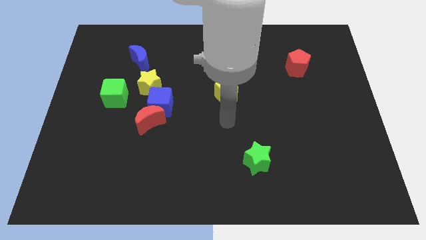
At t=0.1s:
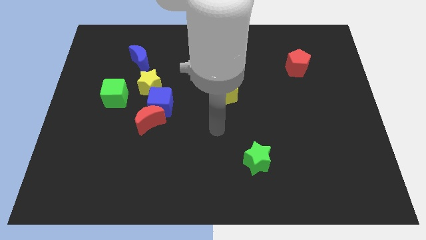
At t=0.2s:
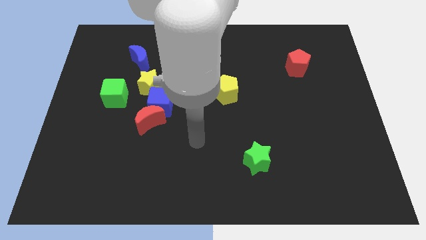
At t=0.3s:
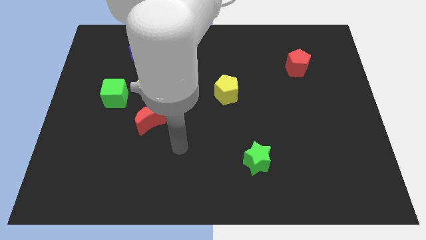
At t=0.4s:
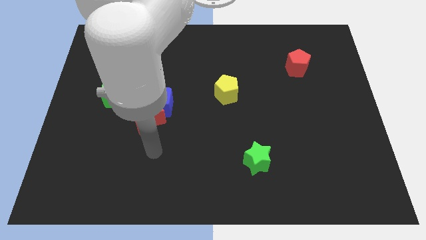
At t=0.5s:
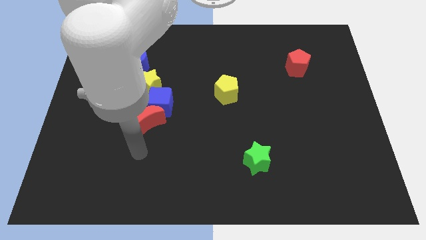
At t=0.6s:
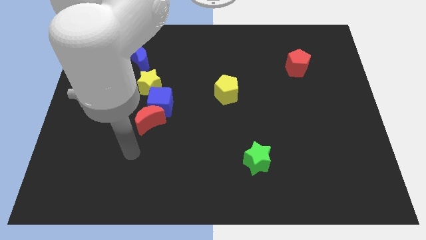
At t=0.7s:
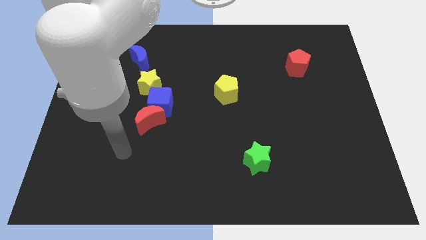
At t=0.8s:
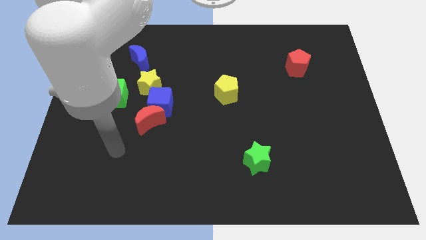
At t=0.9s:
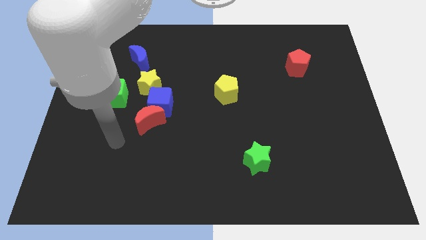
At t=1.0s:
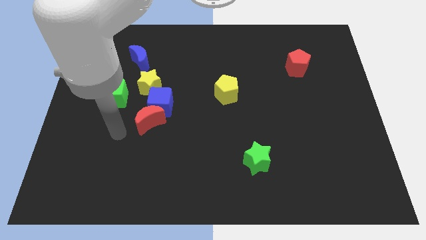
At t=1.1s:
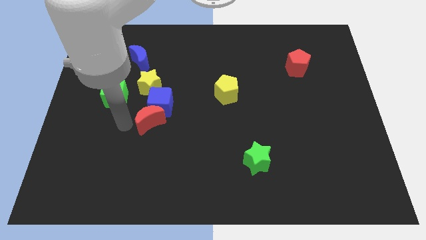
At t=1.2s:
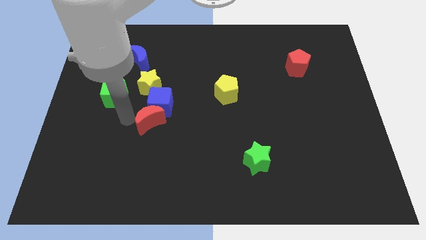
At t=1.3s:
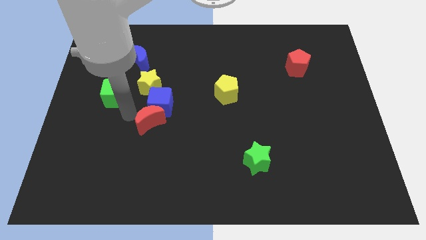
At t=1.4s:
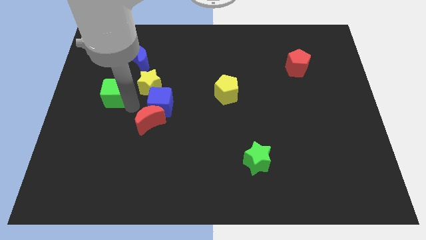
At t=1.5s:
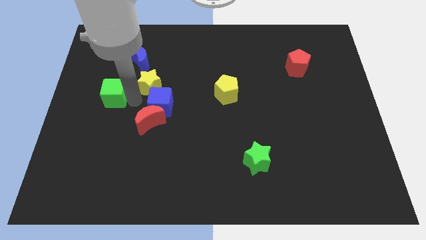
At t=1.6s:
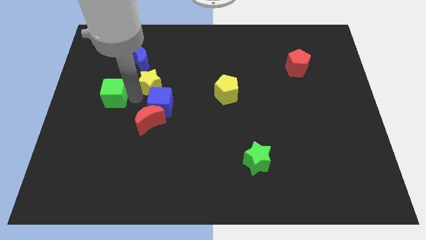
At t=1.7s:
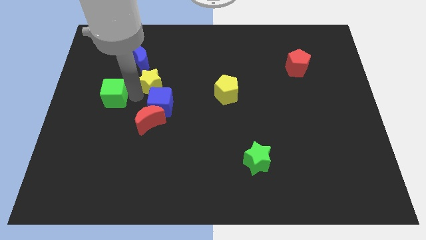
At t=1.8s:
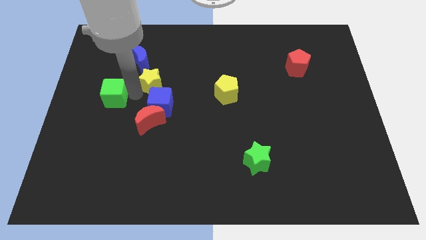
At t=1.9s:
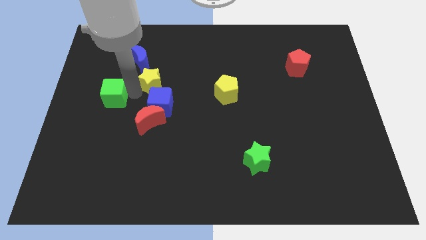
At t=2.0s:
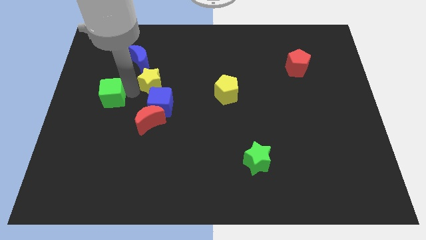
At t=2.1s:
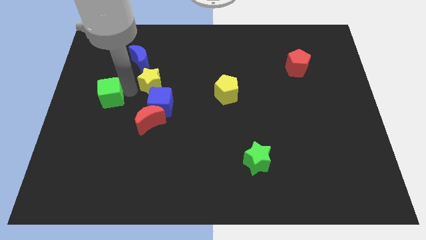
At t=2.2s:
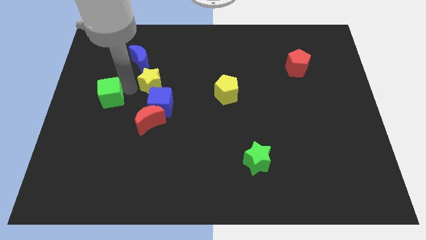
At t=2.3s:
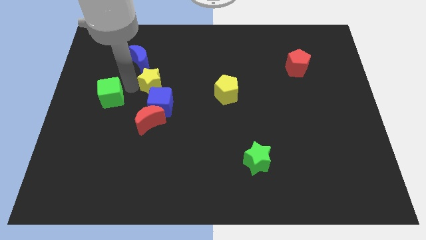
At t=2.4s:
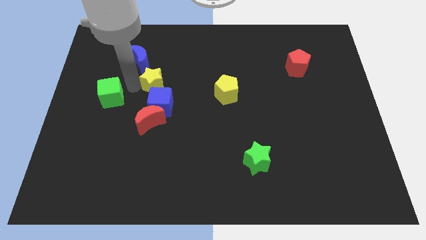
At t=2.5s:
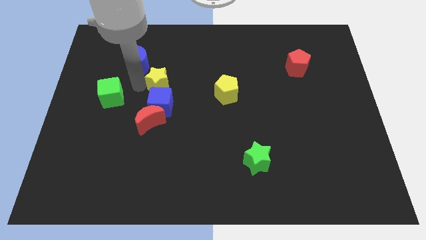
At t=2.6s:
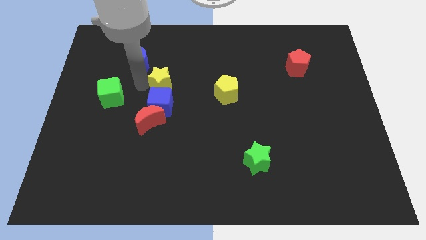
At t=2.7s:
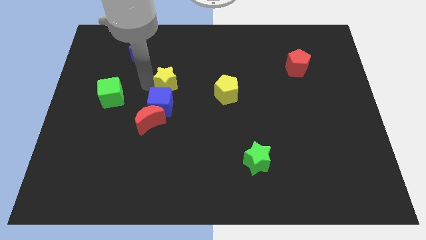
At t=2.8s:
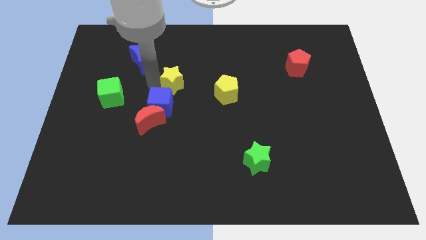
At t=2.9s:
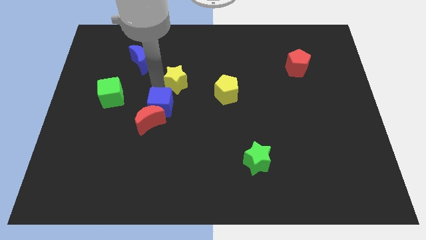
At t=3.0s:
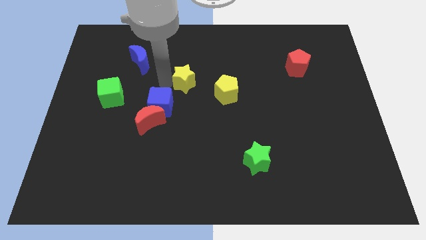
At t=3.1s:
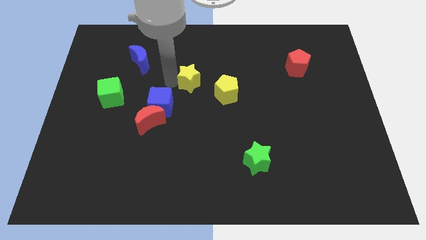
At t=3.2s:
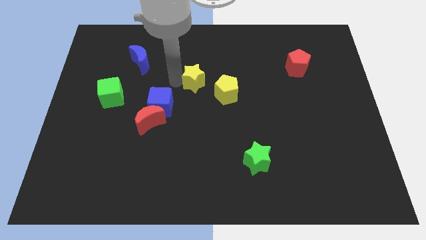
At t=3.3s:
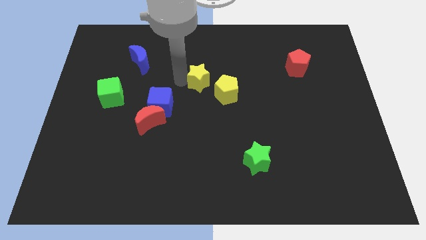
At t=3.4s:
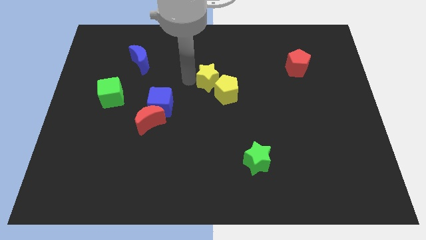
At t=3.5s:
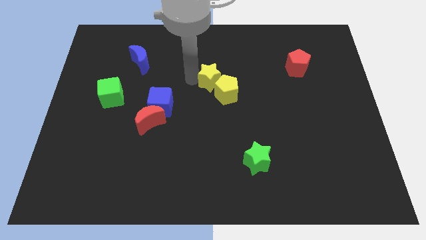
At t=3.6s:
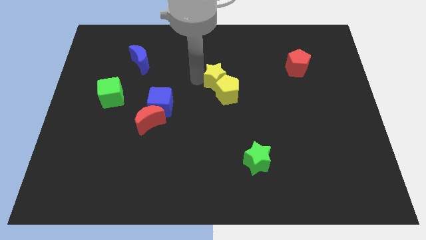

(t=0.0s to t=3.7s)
move the yellow star towards the yellow pentagon

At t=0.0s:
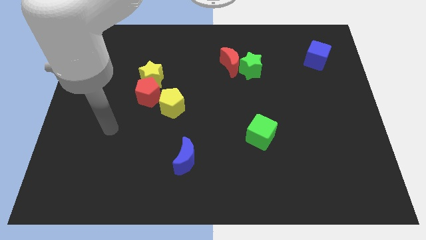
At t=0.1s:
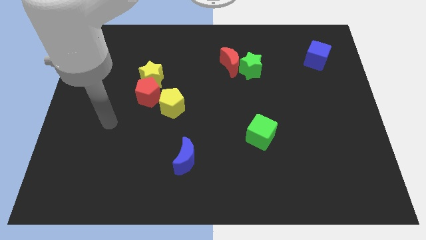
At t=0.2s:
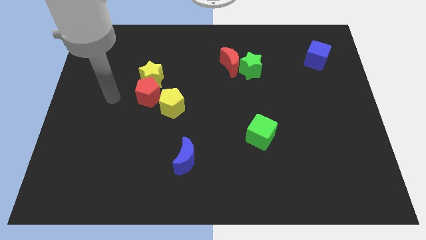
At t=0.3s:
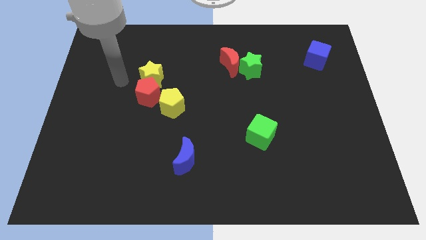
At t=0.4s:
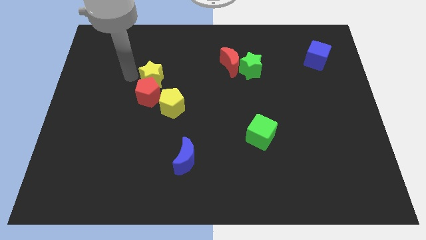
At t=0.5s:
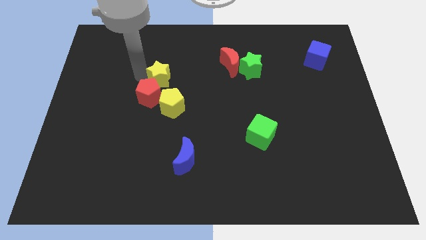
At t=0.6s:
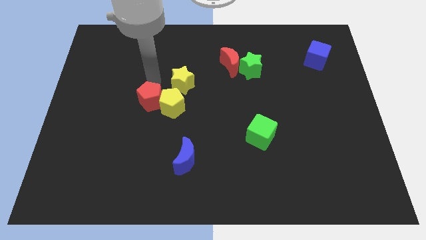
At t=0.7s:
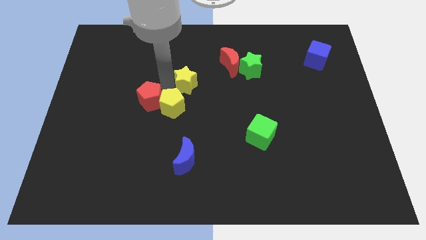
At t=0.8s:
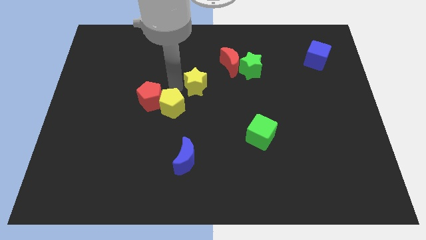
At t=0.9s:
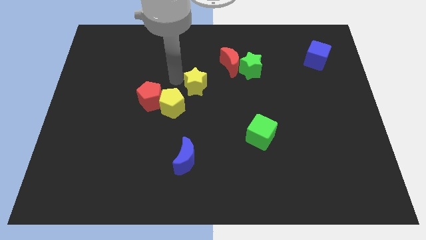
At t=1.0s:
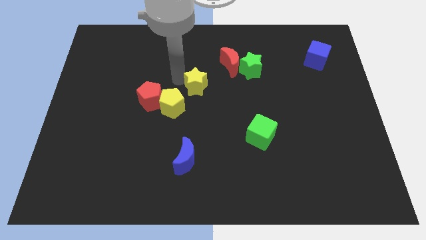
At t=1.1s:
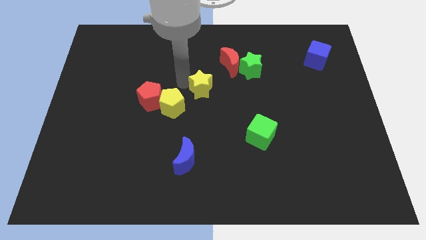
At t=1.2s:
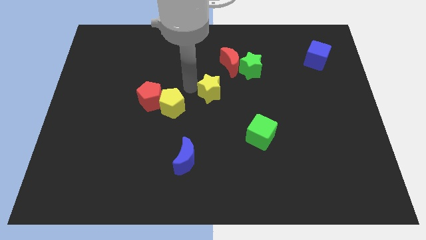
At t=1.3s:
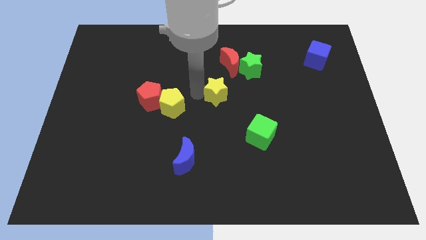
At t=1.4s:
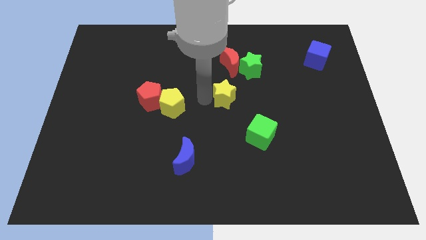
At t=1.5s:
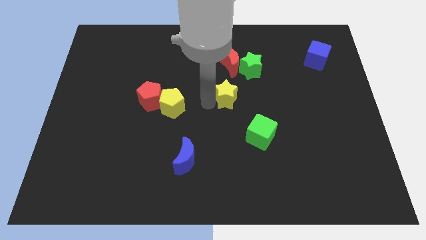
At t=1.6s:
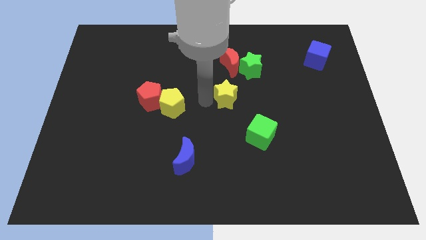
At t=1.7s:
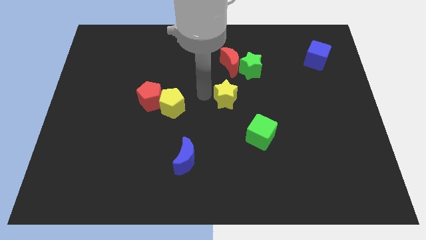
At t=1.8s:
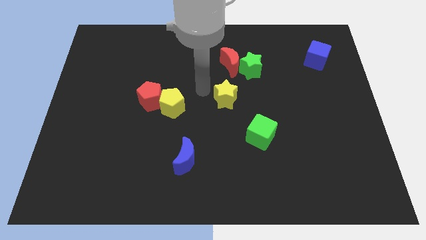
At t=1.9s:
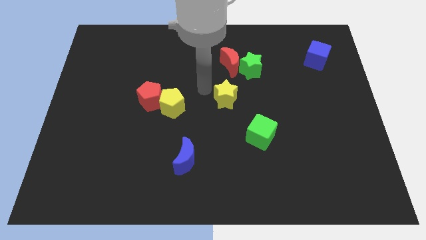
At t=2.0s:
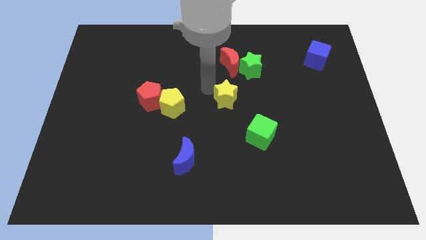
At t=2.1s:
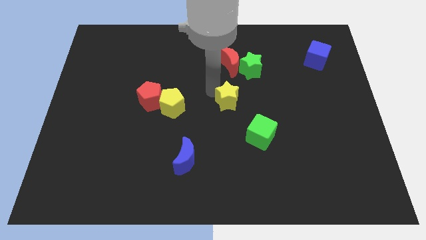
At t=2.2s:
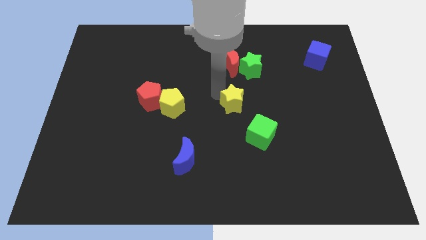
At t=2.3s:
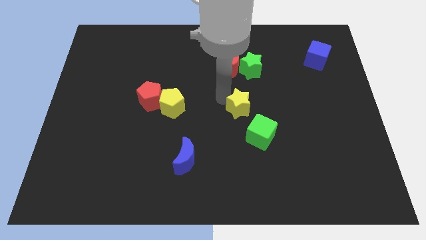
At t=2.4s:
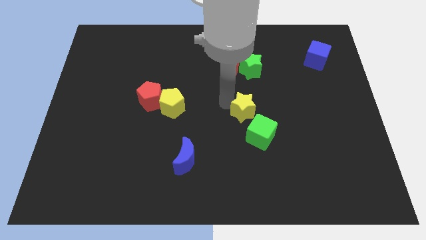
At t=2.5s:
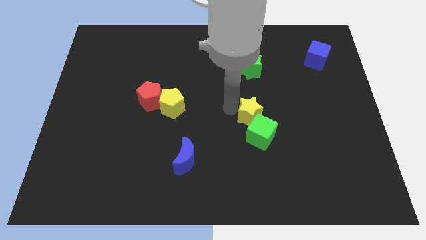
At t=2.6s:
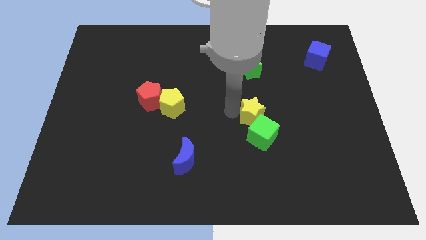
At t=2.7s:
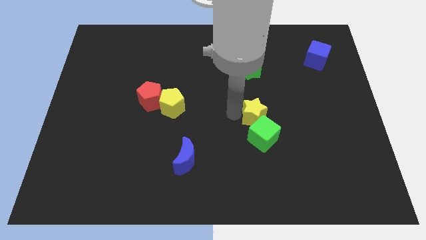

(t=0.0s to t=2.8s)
put the yellow star close to the green cube

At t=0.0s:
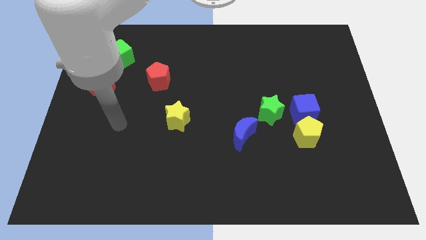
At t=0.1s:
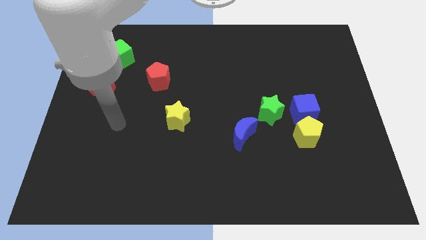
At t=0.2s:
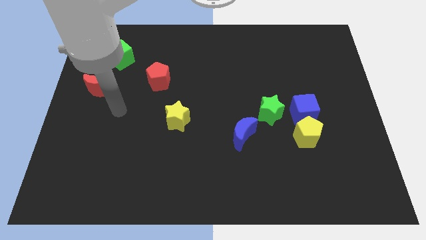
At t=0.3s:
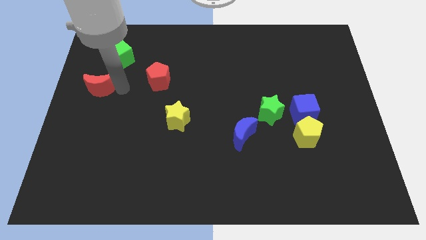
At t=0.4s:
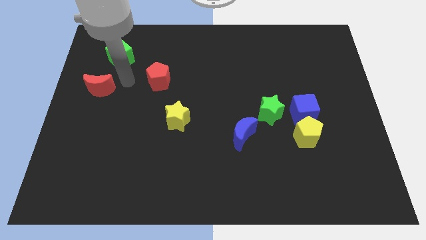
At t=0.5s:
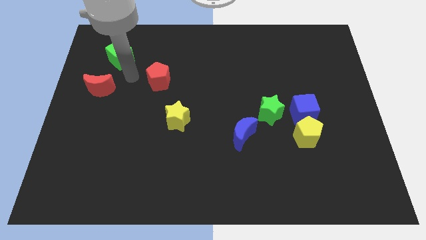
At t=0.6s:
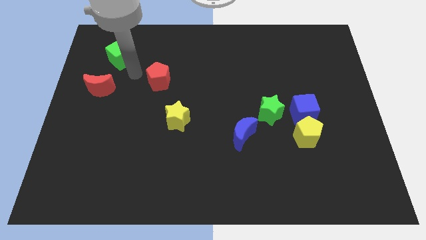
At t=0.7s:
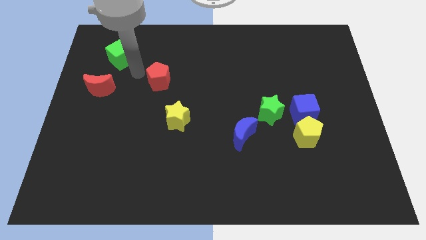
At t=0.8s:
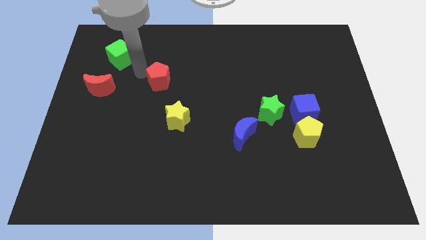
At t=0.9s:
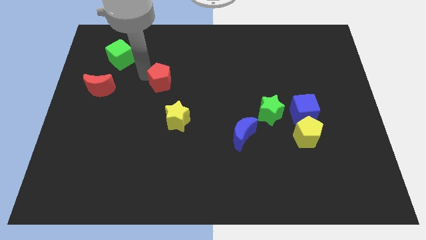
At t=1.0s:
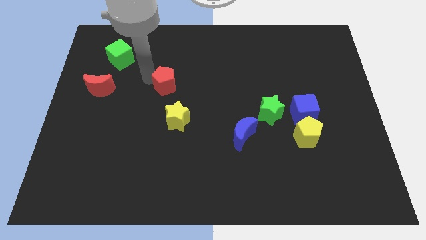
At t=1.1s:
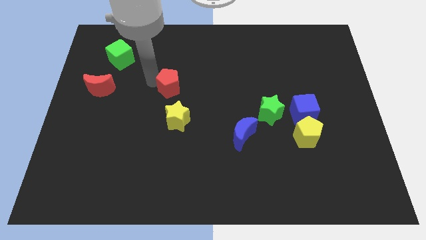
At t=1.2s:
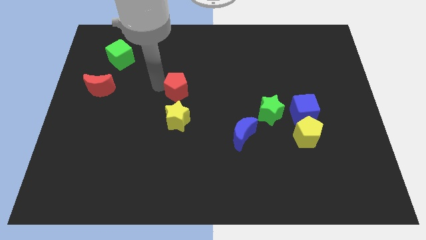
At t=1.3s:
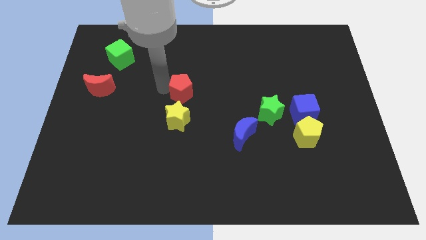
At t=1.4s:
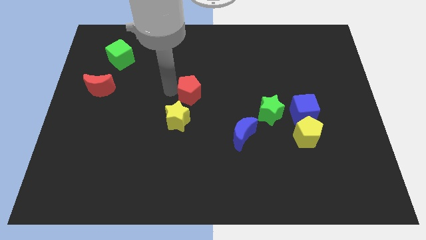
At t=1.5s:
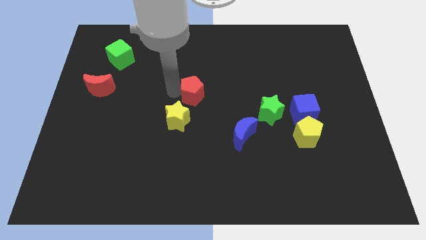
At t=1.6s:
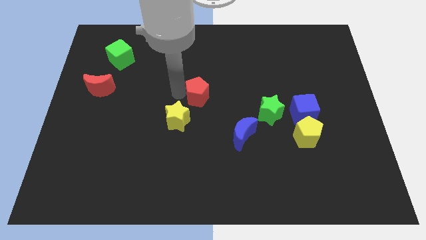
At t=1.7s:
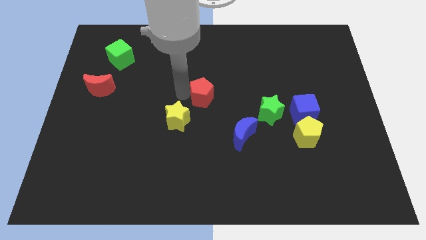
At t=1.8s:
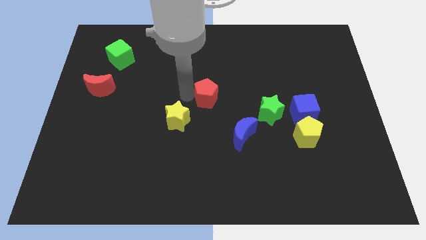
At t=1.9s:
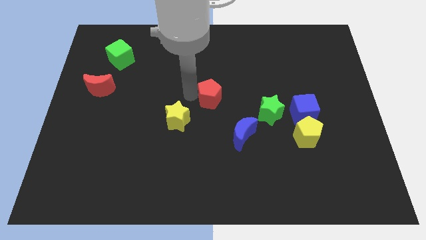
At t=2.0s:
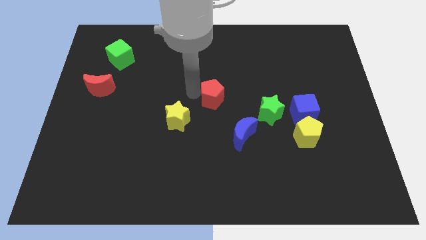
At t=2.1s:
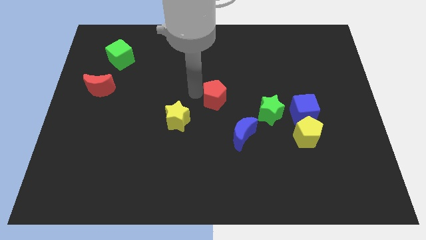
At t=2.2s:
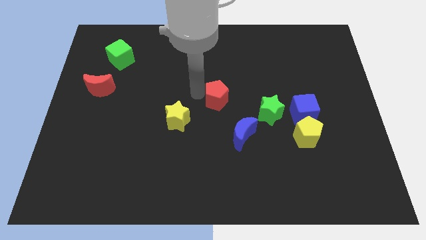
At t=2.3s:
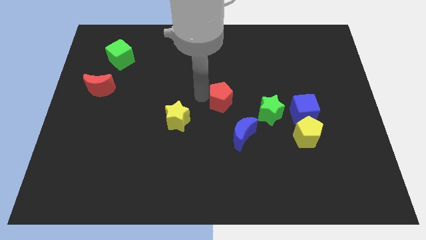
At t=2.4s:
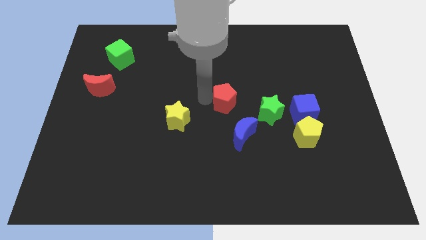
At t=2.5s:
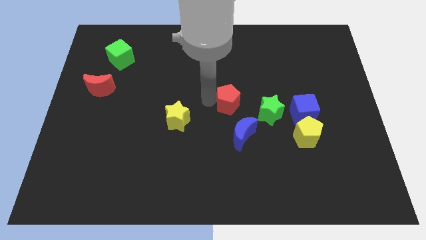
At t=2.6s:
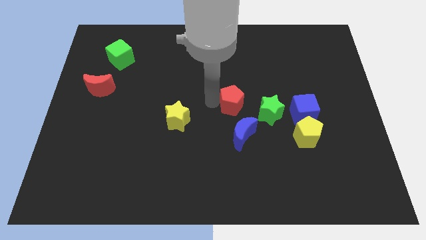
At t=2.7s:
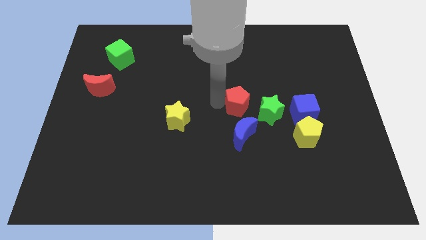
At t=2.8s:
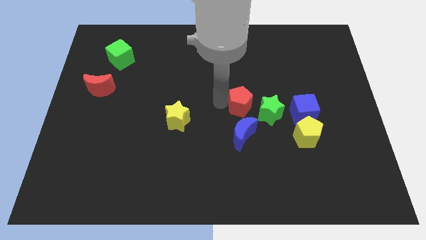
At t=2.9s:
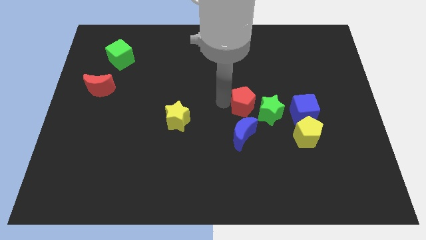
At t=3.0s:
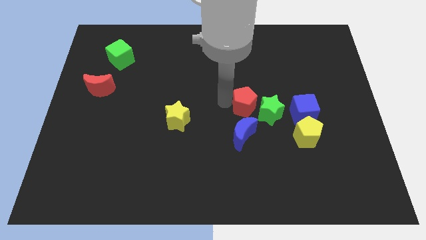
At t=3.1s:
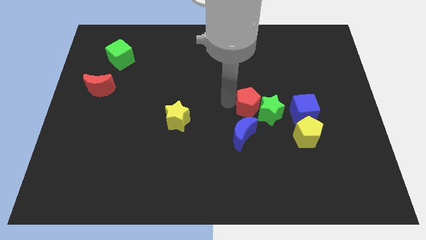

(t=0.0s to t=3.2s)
push the red pentagon towards the green star
